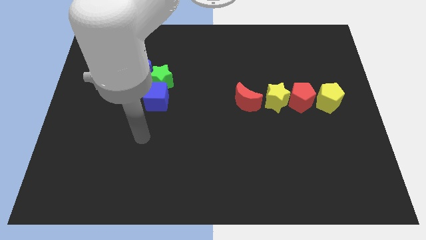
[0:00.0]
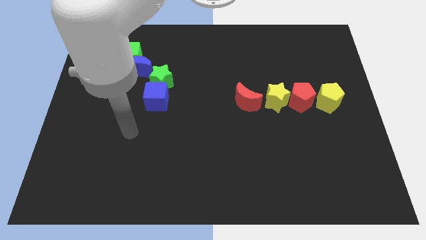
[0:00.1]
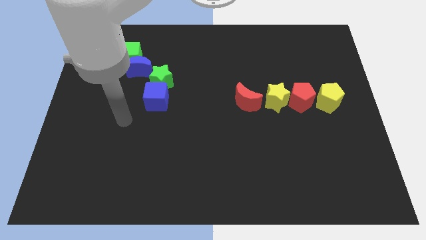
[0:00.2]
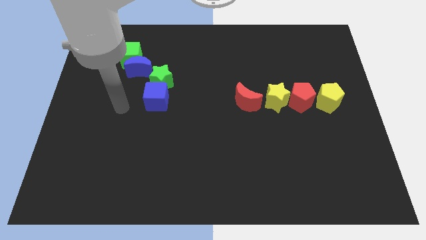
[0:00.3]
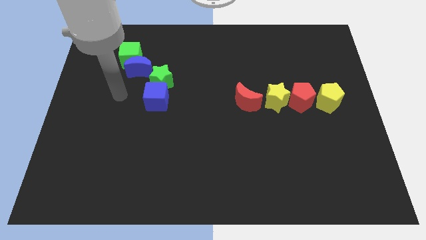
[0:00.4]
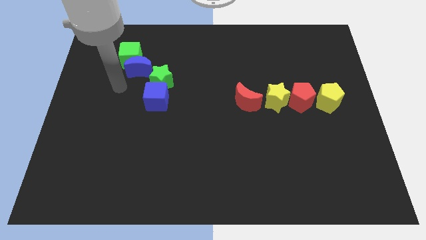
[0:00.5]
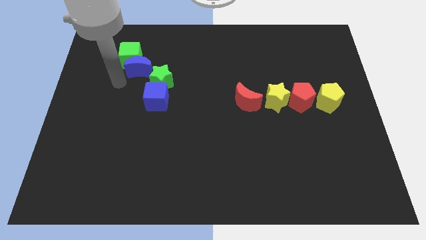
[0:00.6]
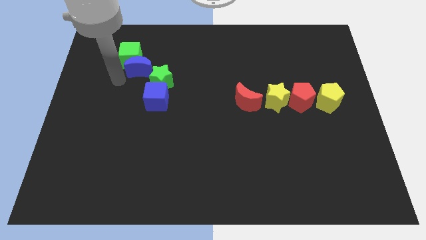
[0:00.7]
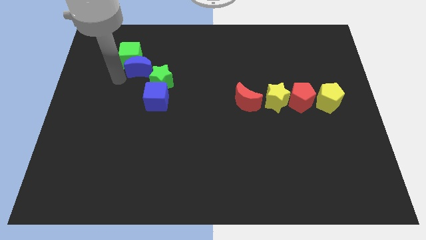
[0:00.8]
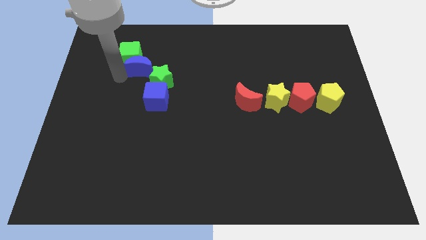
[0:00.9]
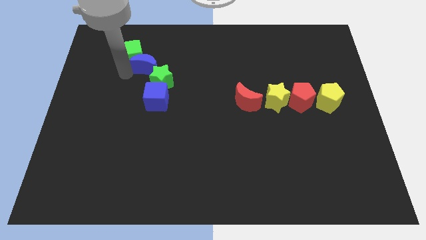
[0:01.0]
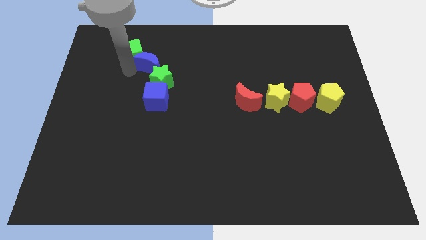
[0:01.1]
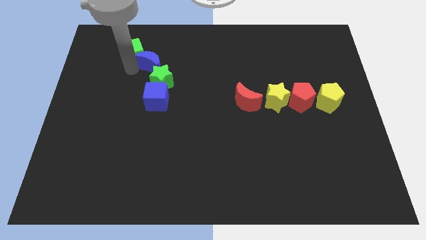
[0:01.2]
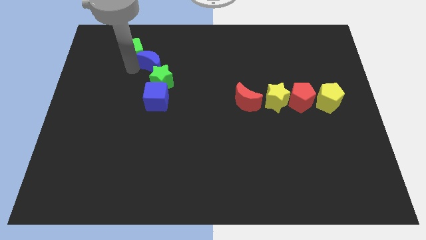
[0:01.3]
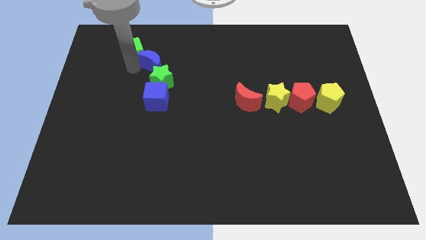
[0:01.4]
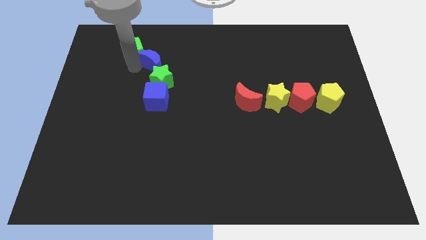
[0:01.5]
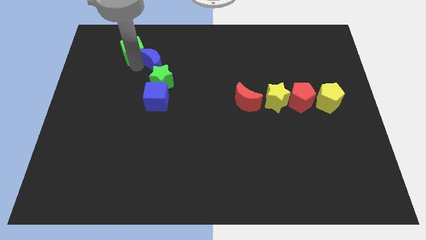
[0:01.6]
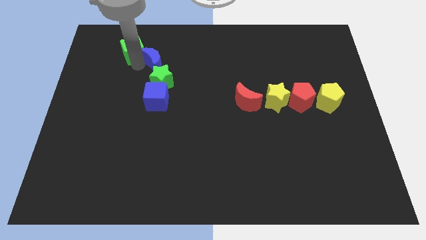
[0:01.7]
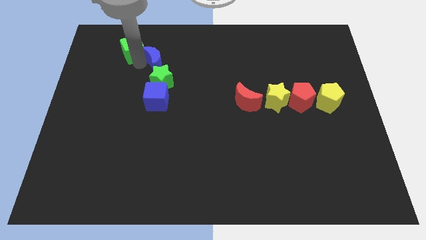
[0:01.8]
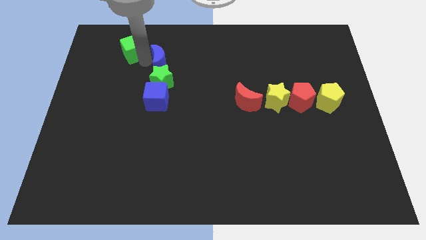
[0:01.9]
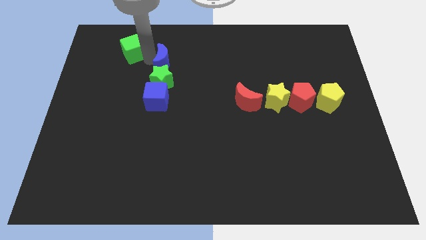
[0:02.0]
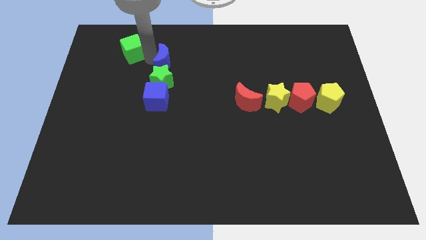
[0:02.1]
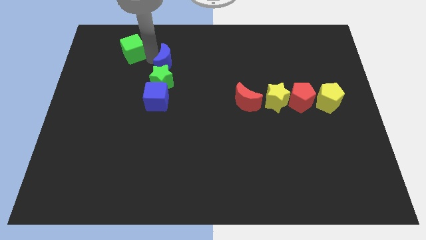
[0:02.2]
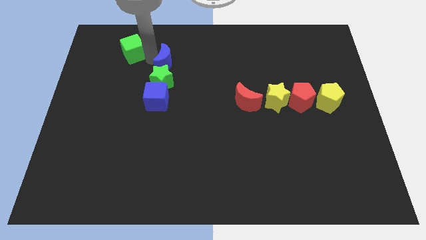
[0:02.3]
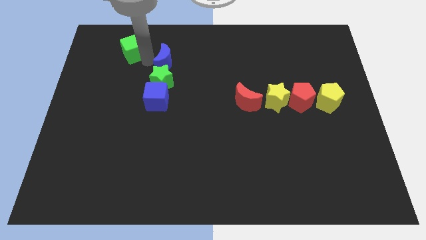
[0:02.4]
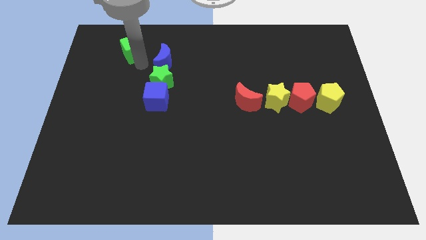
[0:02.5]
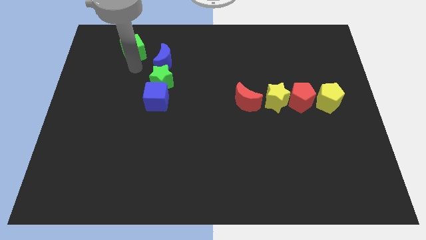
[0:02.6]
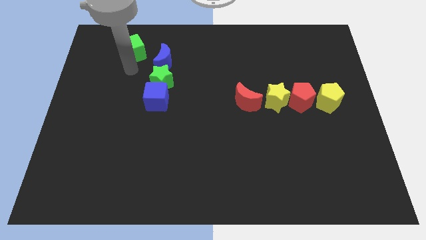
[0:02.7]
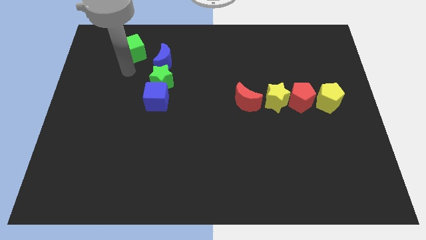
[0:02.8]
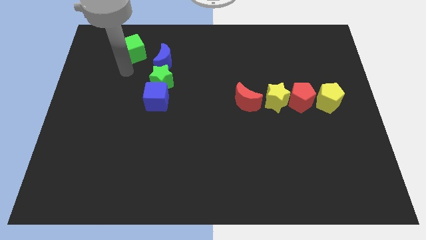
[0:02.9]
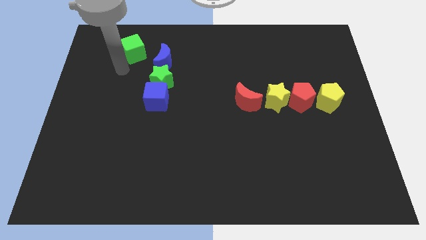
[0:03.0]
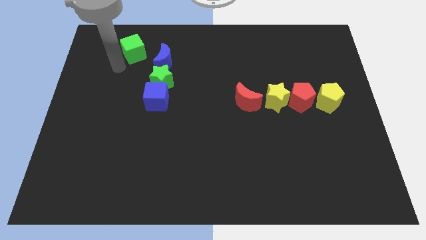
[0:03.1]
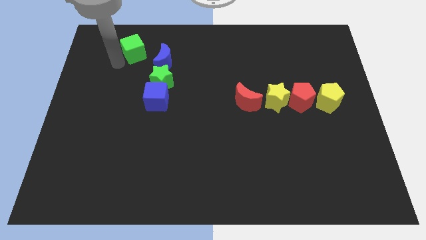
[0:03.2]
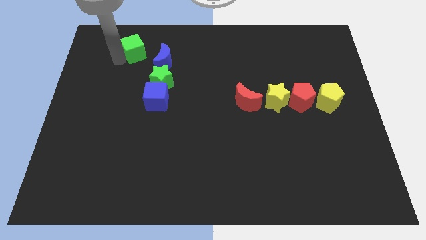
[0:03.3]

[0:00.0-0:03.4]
place the blue moon above the green star

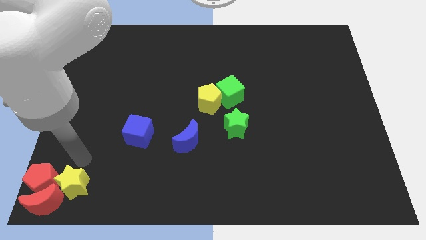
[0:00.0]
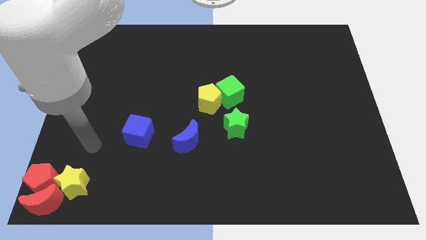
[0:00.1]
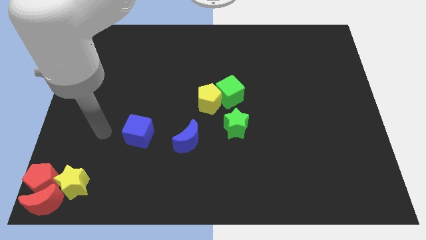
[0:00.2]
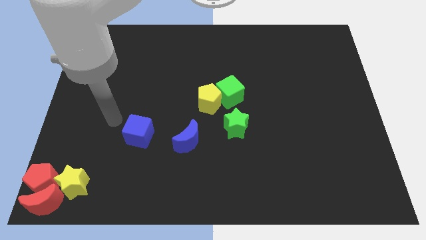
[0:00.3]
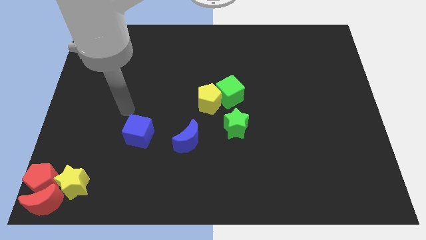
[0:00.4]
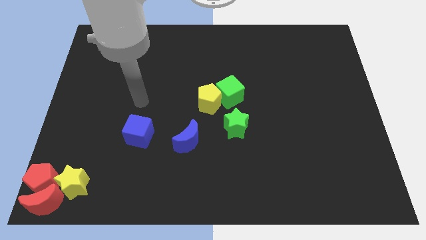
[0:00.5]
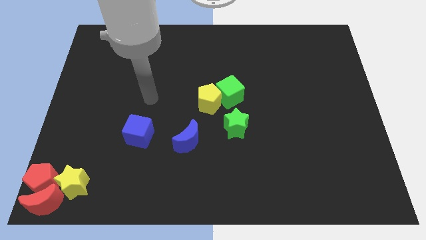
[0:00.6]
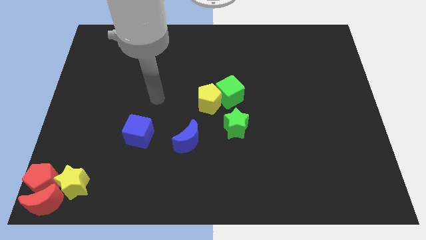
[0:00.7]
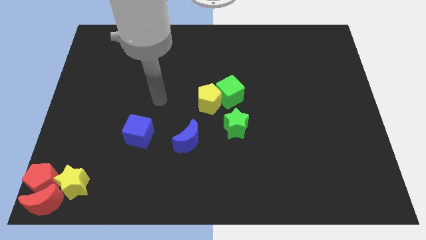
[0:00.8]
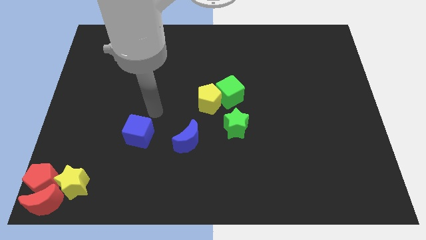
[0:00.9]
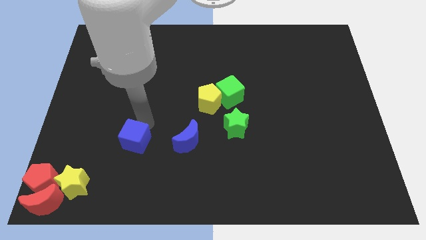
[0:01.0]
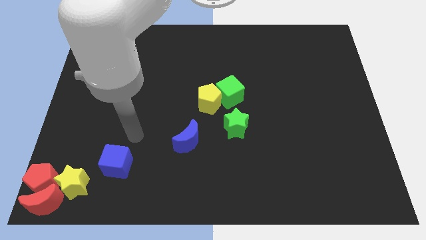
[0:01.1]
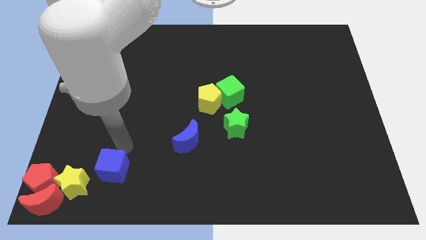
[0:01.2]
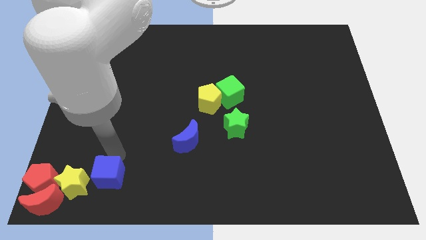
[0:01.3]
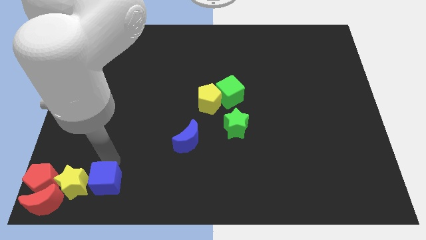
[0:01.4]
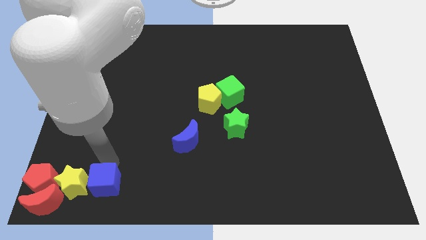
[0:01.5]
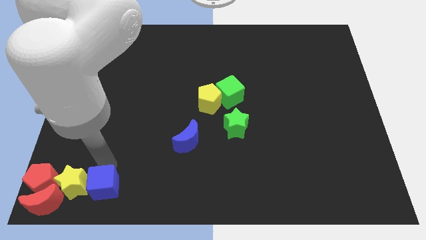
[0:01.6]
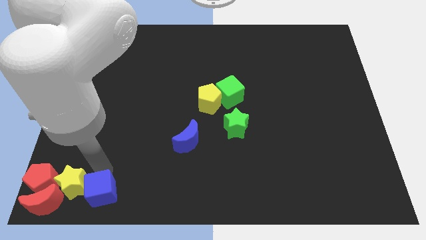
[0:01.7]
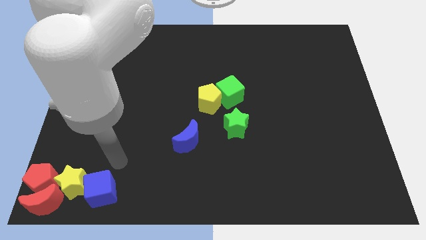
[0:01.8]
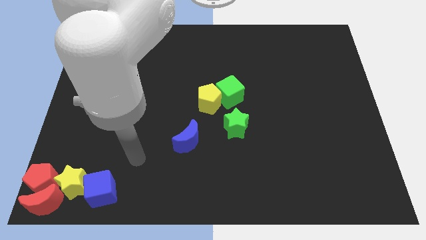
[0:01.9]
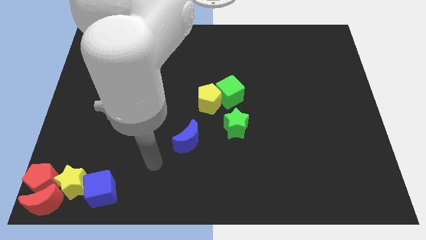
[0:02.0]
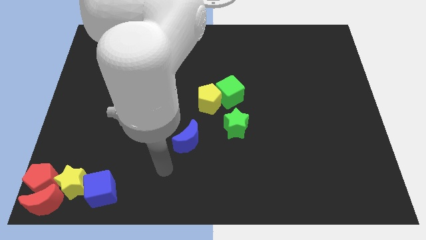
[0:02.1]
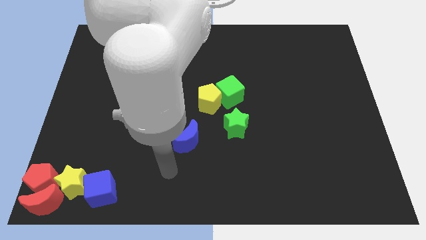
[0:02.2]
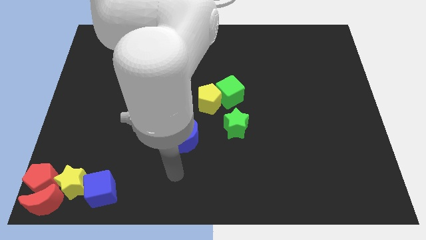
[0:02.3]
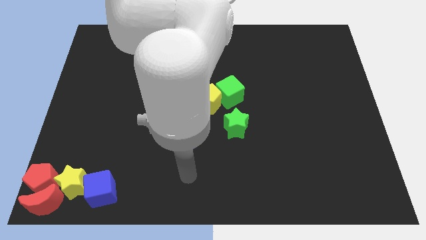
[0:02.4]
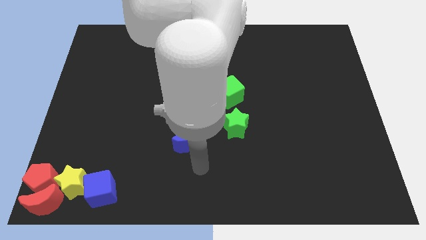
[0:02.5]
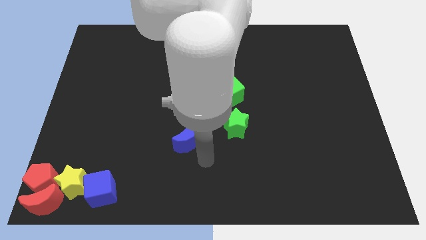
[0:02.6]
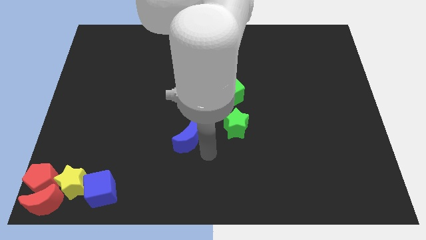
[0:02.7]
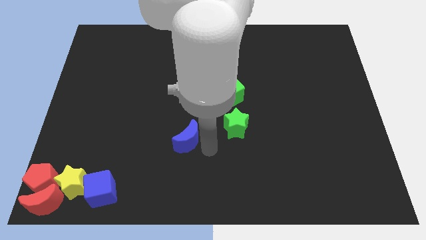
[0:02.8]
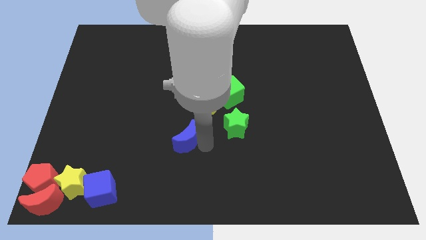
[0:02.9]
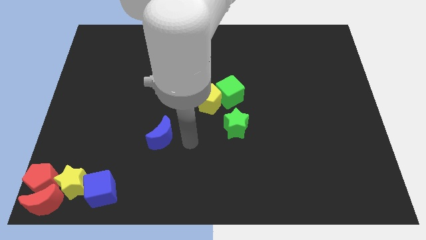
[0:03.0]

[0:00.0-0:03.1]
move the blue cube right to the yellow star

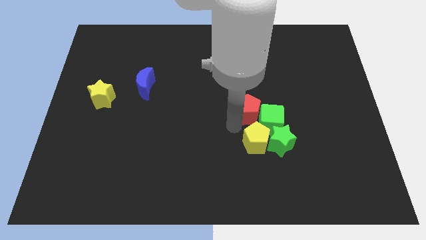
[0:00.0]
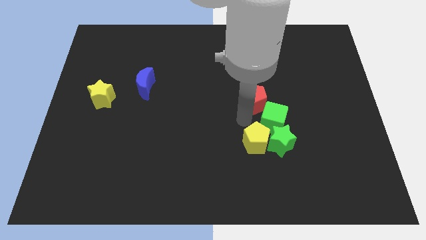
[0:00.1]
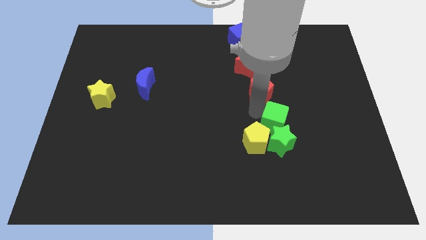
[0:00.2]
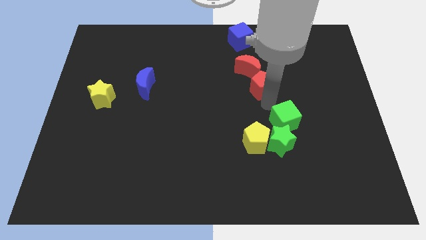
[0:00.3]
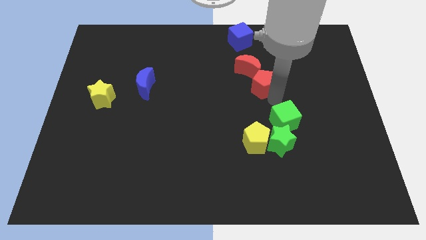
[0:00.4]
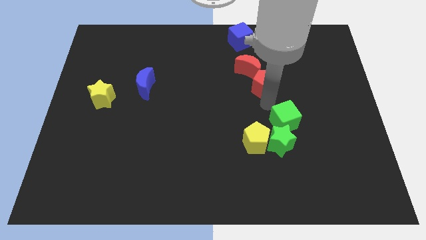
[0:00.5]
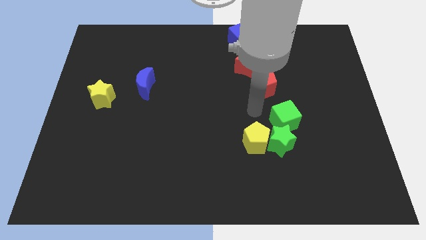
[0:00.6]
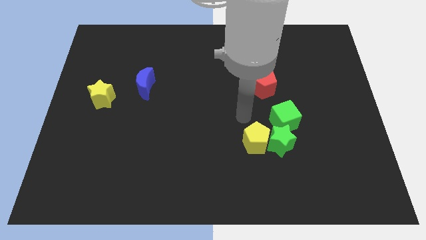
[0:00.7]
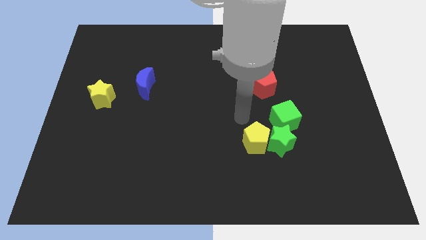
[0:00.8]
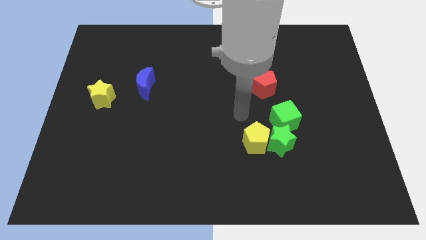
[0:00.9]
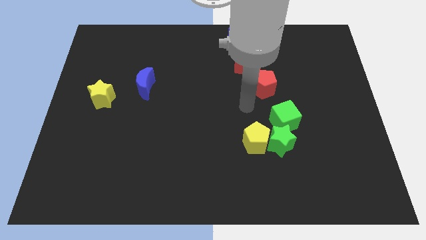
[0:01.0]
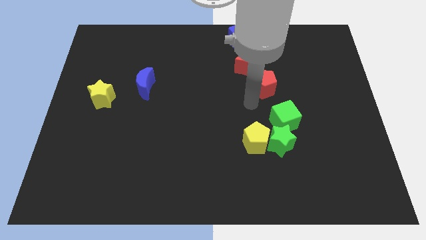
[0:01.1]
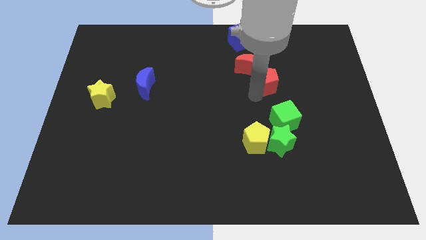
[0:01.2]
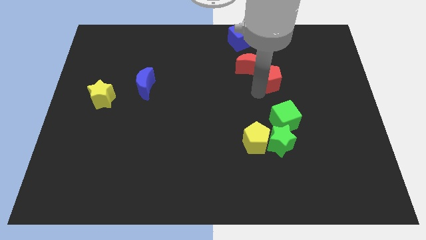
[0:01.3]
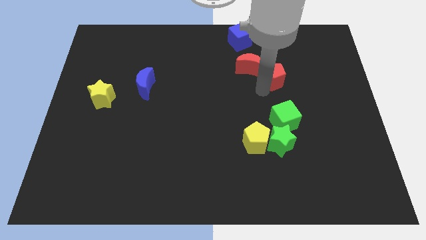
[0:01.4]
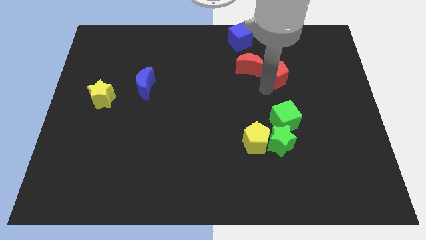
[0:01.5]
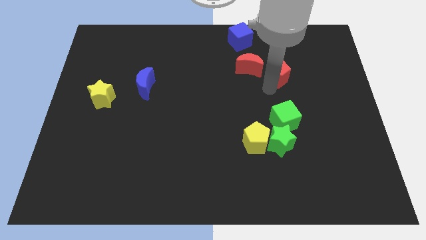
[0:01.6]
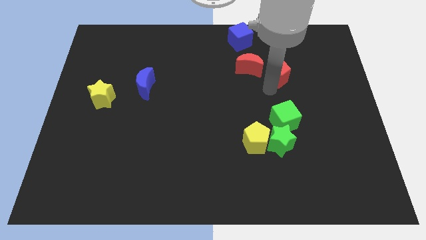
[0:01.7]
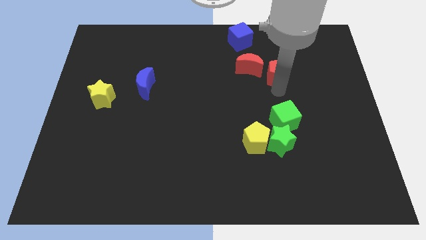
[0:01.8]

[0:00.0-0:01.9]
separate the red pentagon from green cube

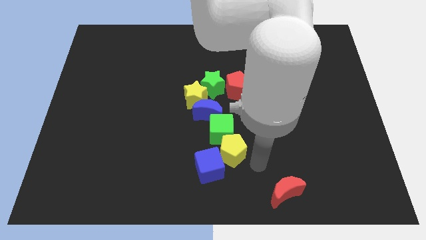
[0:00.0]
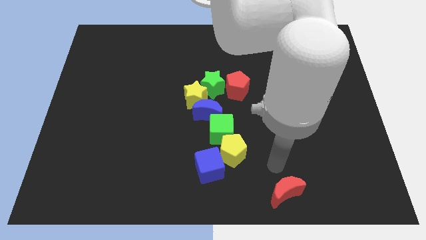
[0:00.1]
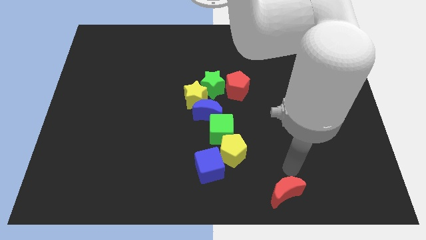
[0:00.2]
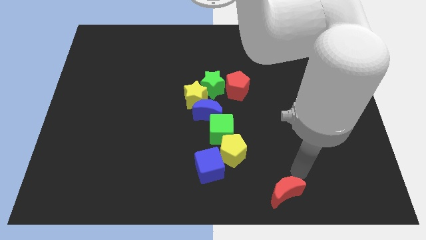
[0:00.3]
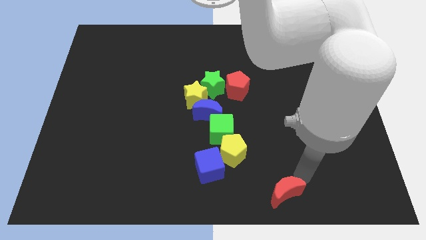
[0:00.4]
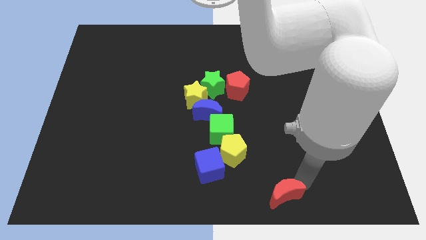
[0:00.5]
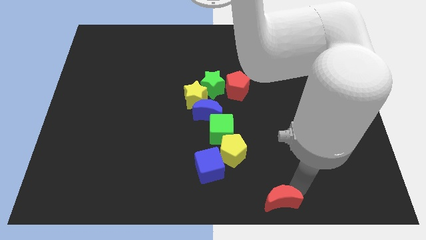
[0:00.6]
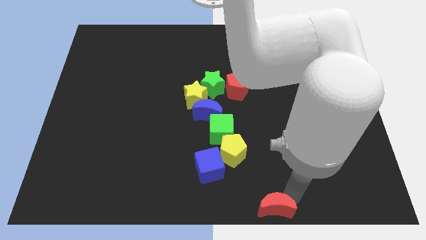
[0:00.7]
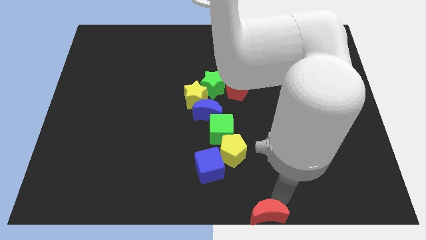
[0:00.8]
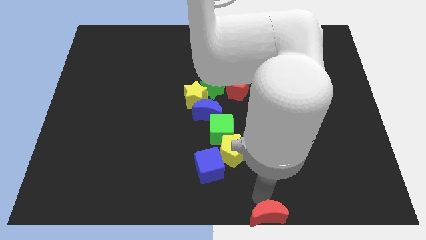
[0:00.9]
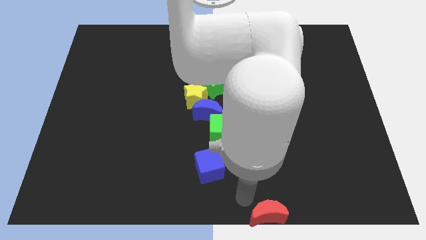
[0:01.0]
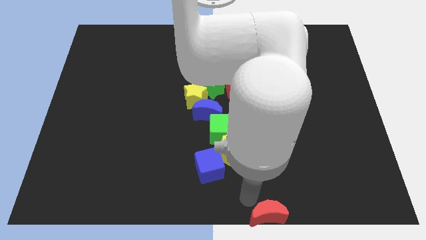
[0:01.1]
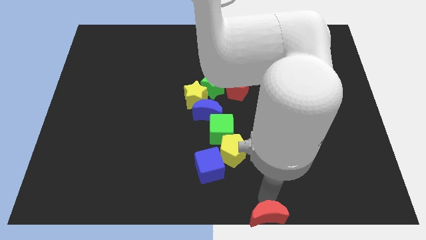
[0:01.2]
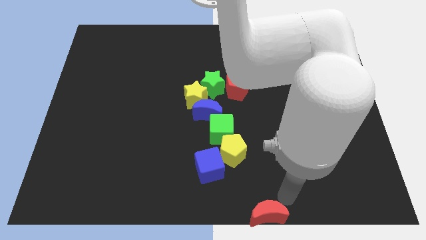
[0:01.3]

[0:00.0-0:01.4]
move the red crescent to the bottom center of the board
